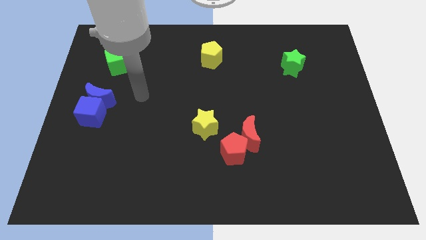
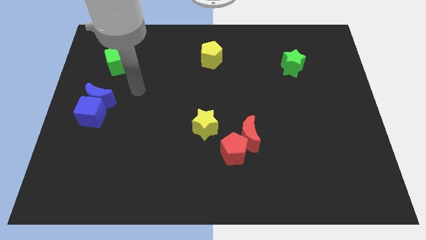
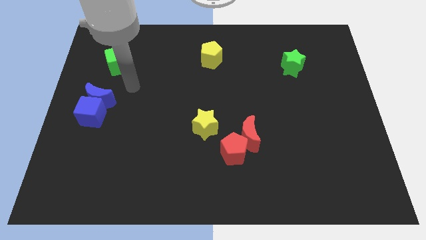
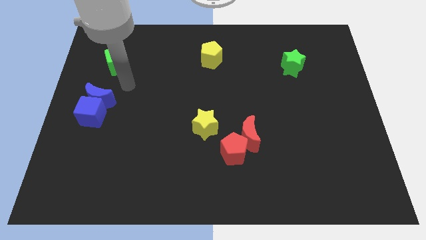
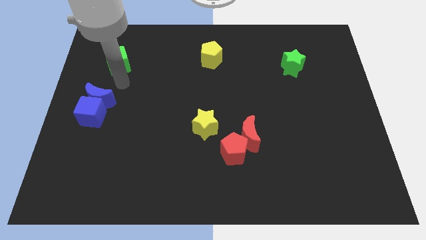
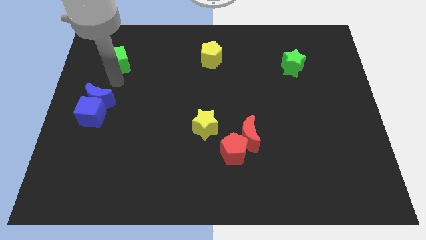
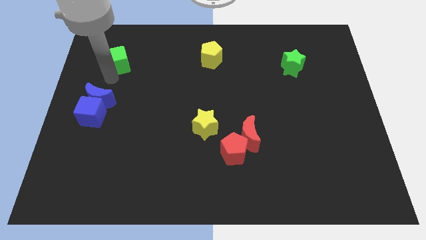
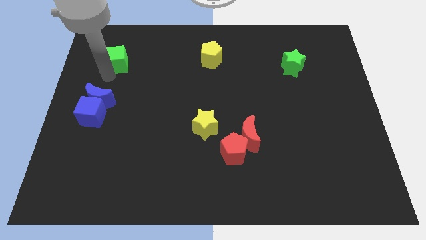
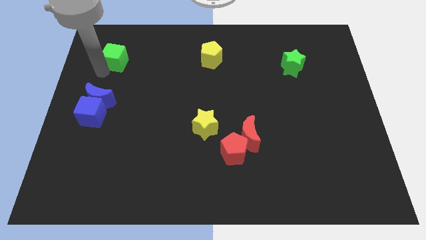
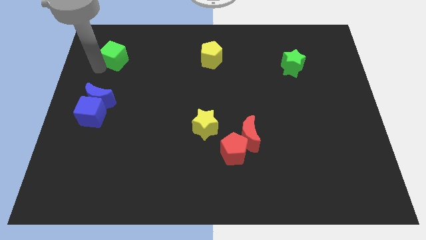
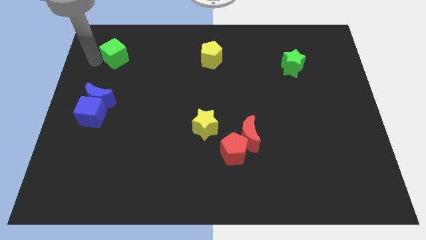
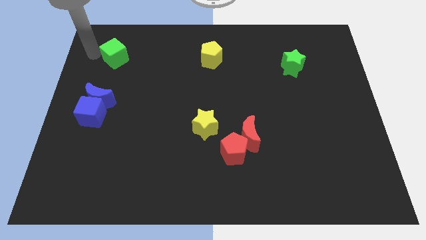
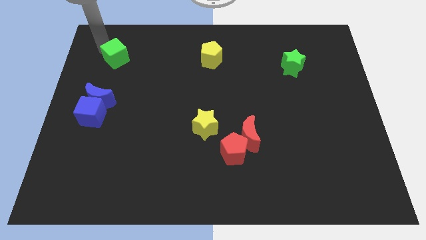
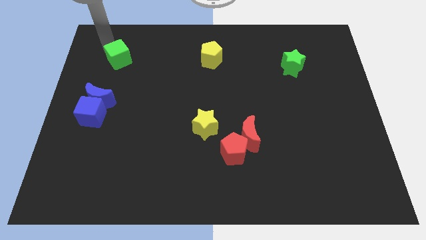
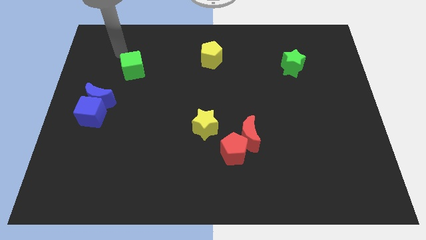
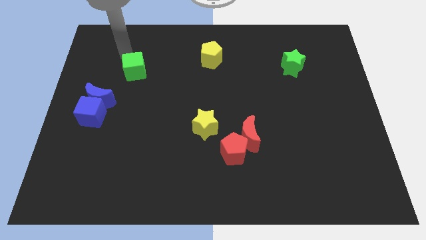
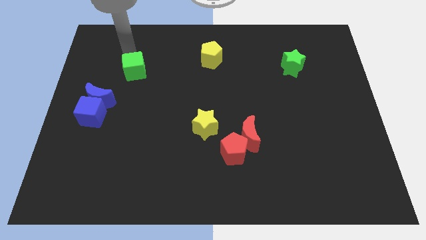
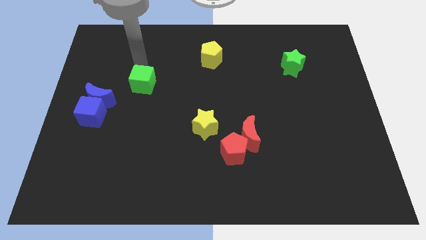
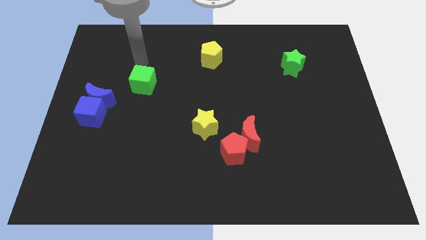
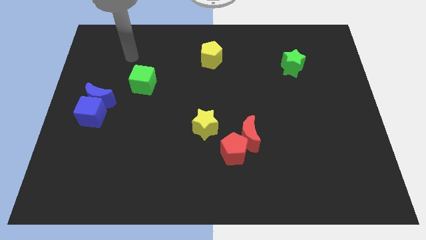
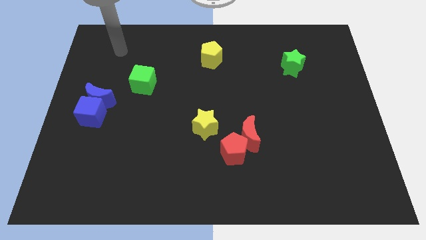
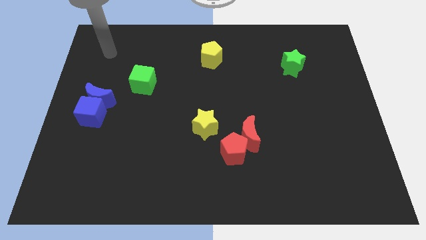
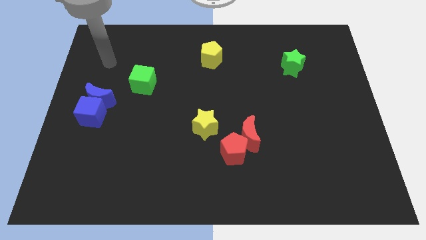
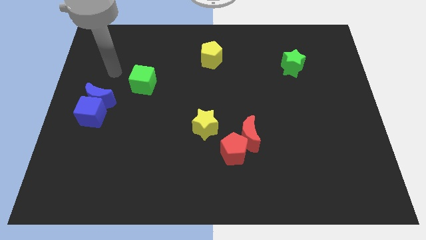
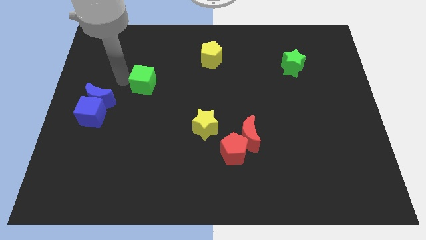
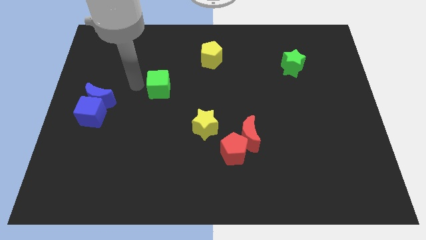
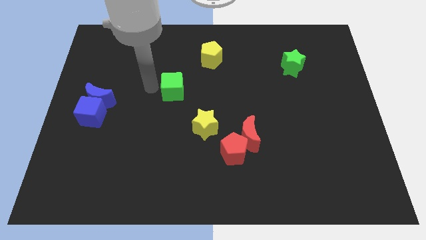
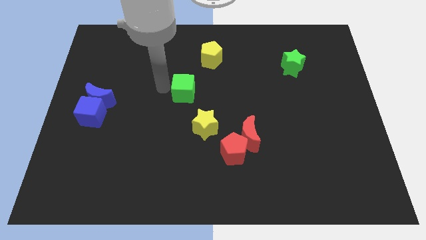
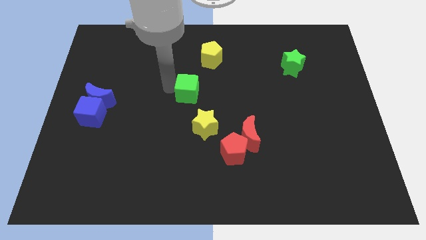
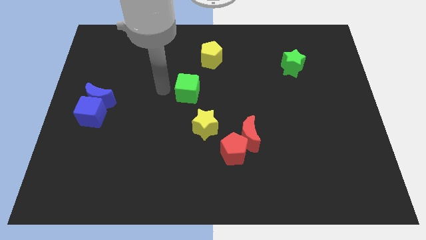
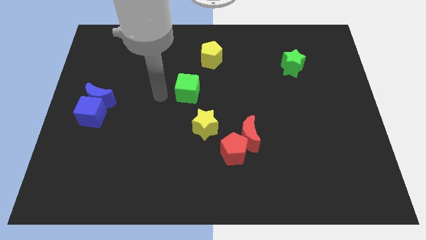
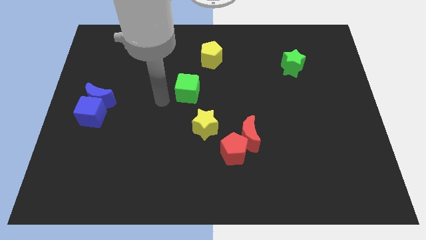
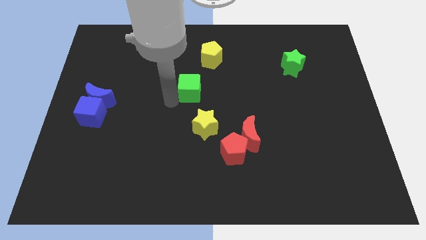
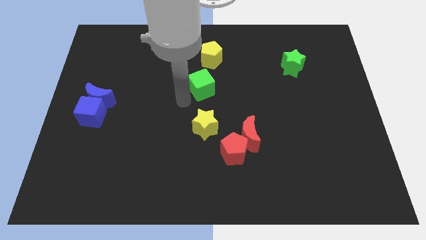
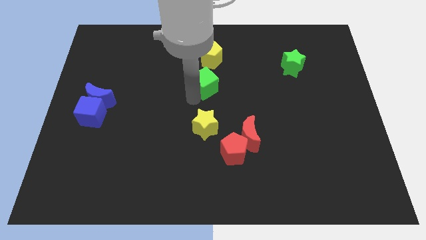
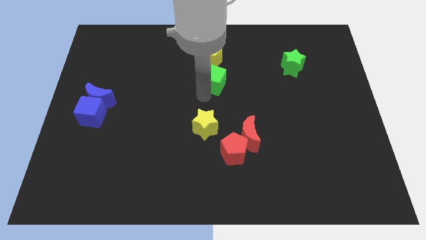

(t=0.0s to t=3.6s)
place the green cube above the yellow star

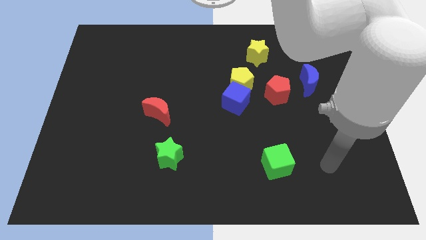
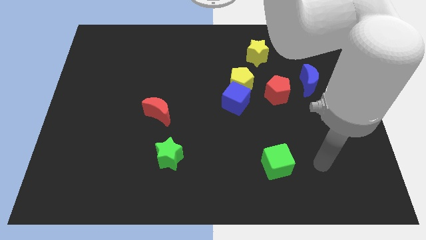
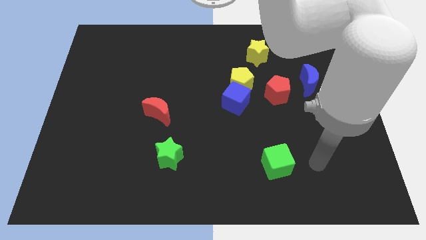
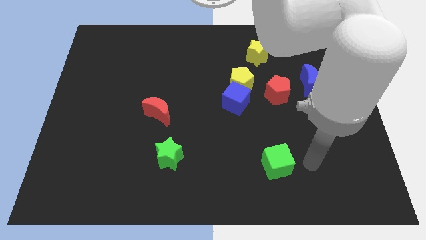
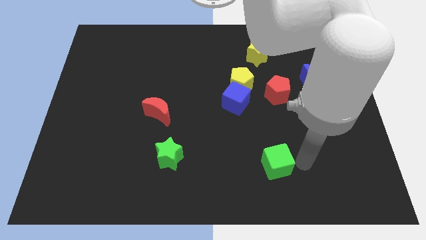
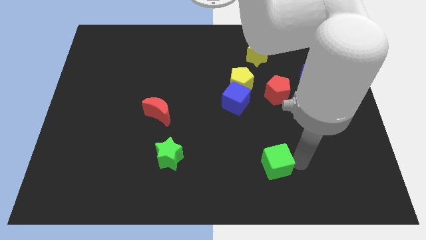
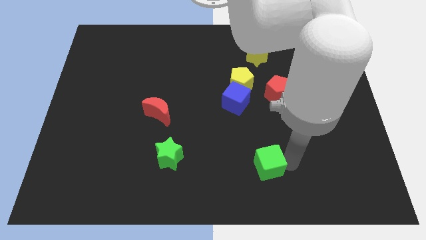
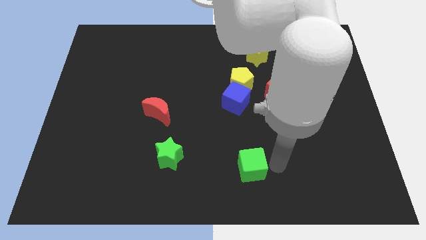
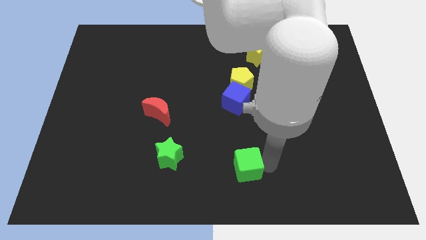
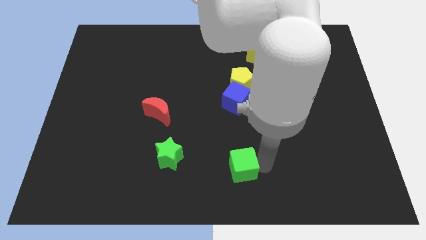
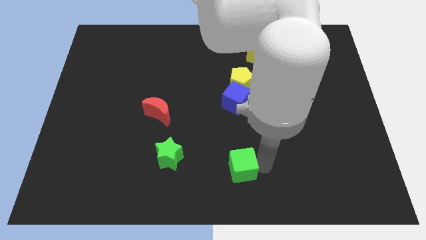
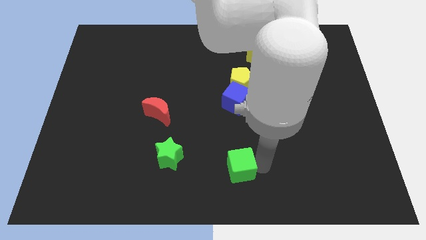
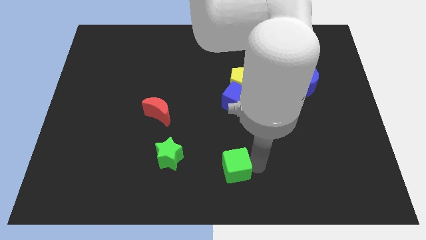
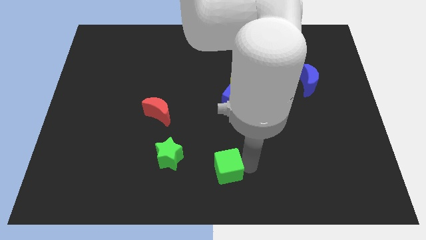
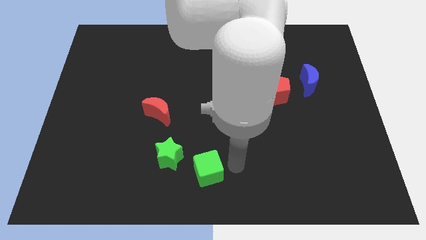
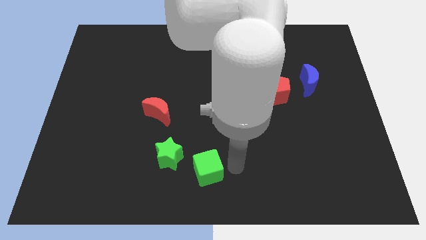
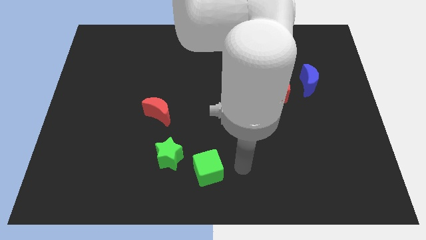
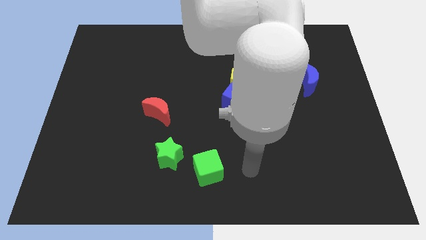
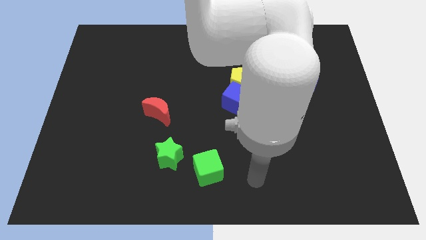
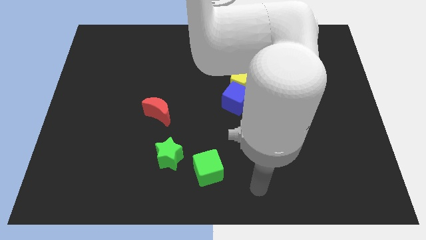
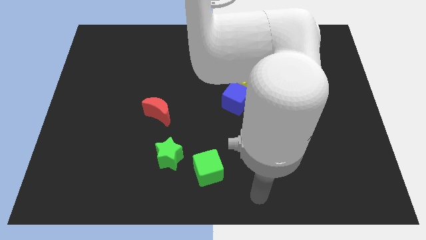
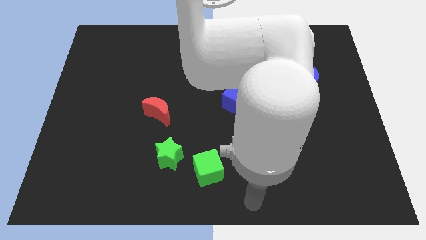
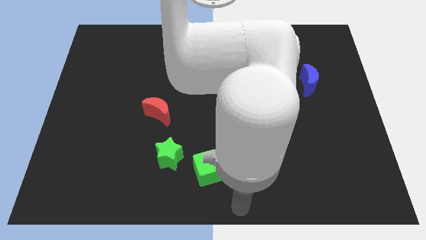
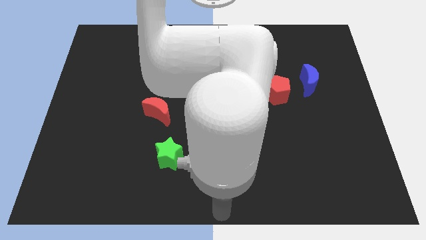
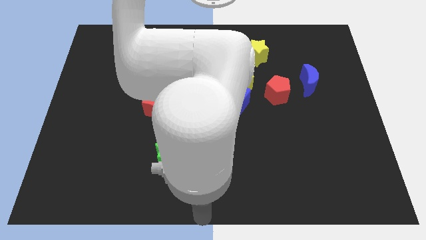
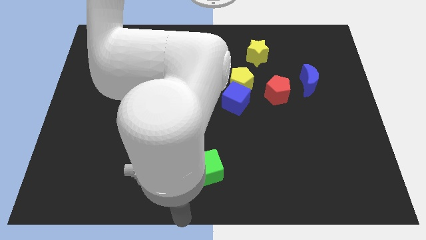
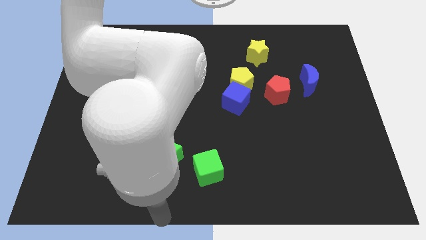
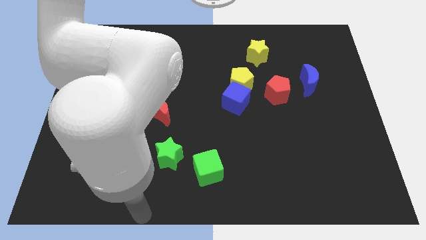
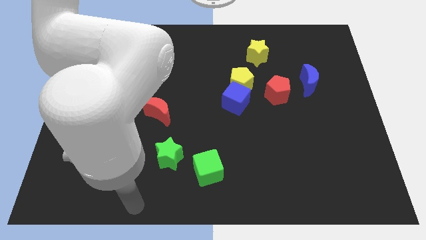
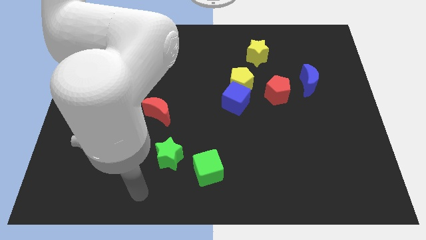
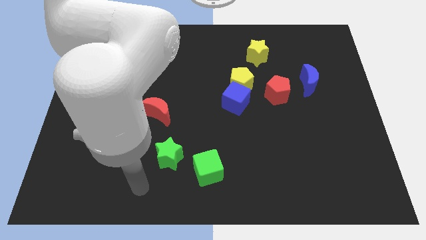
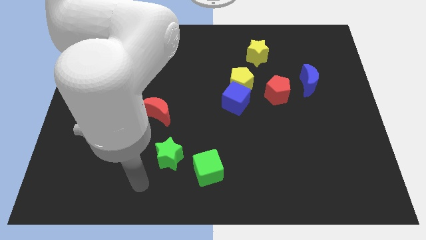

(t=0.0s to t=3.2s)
slide the green cube towards the bottom center

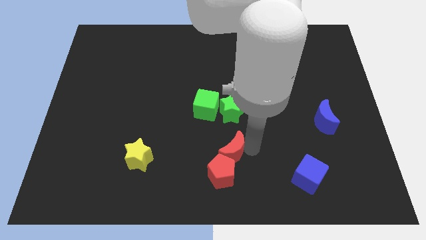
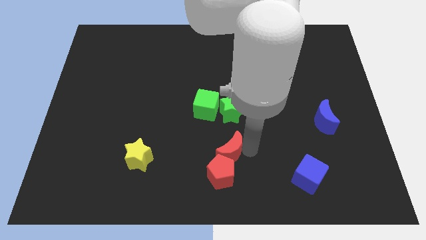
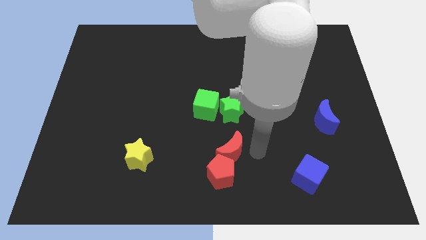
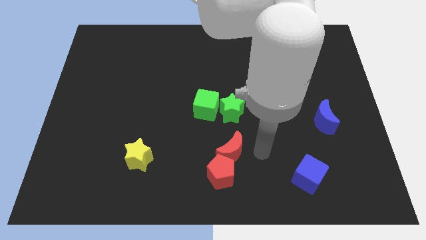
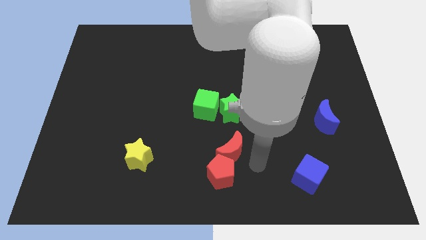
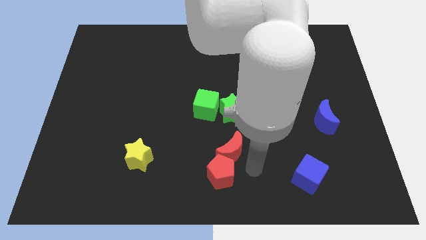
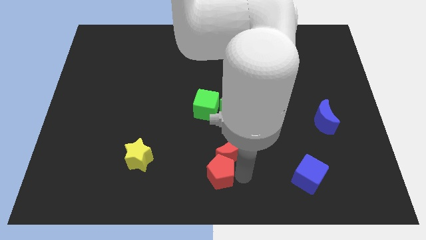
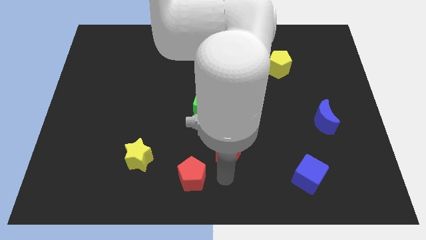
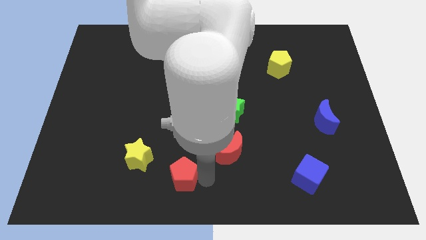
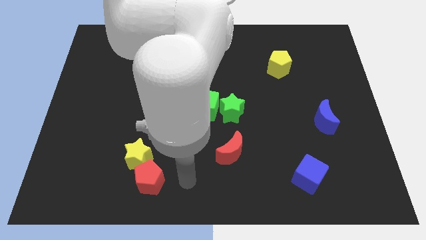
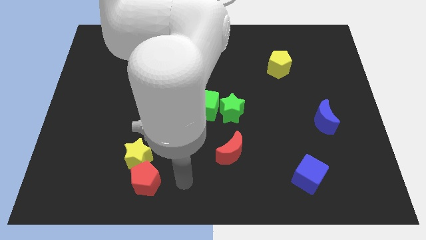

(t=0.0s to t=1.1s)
separate red blocks from each other

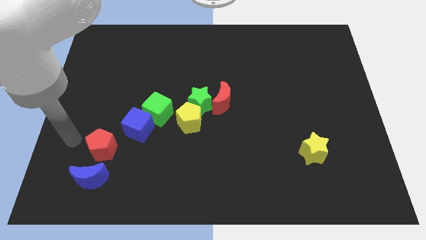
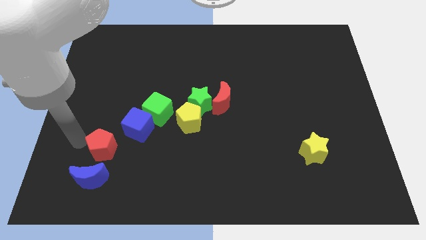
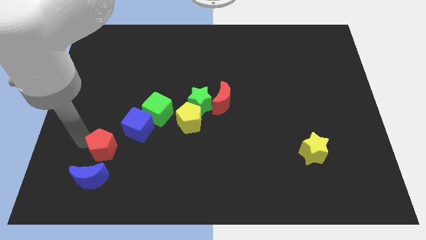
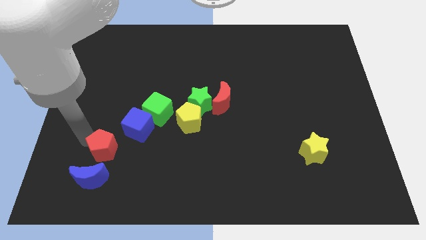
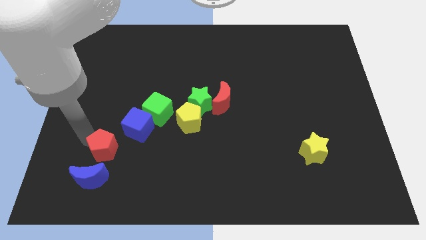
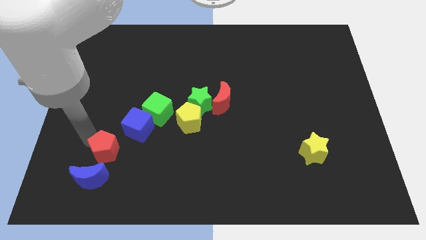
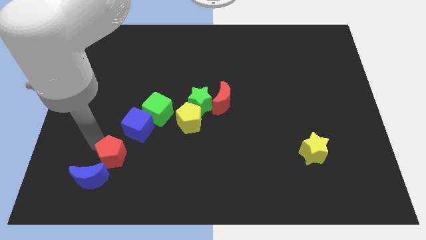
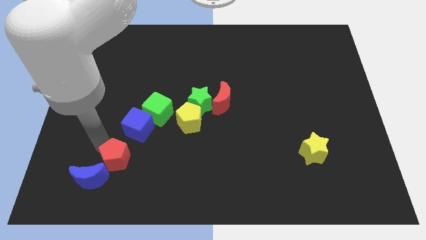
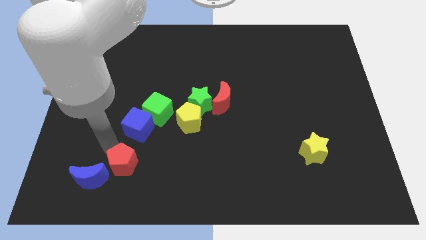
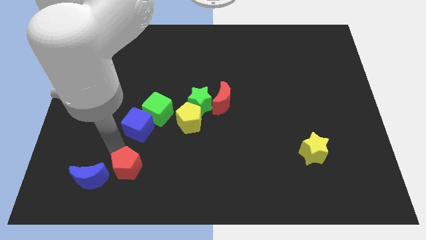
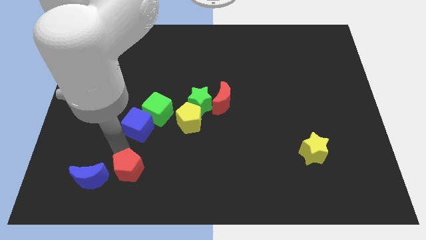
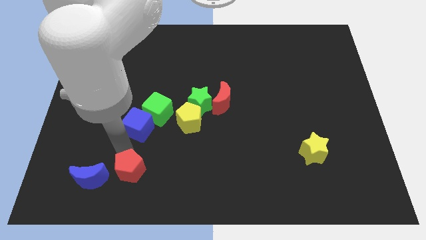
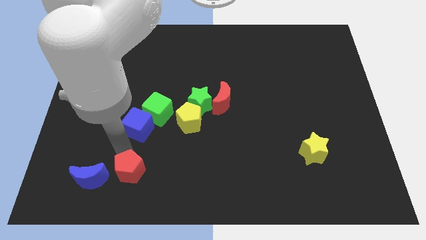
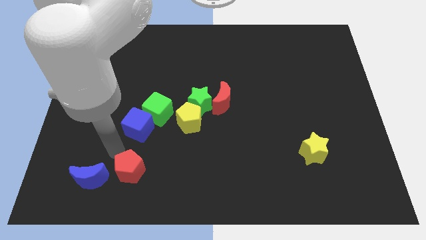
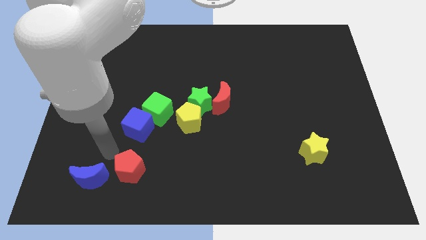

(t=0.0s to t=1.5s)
place the red pentagon below the blue cube
